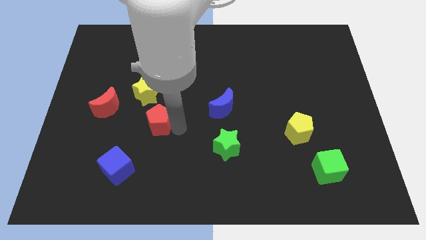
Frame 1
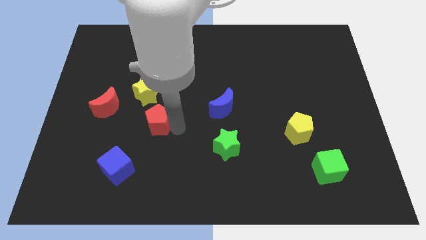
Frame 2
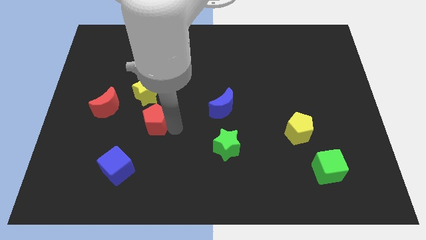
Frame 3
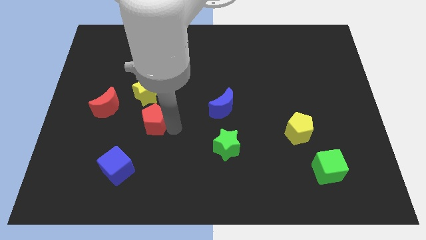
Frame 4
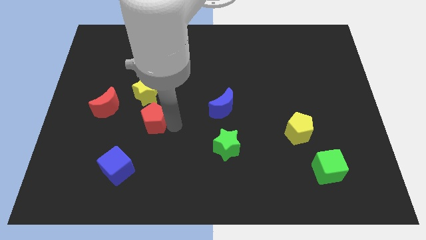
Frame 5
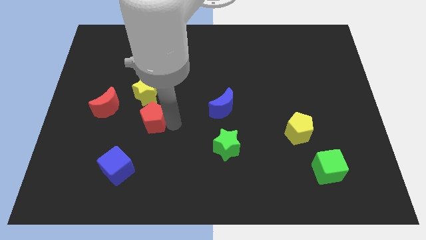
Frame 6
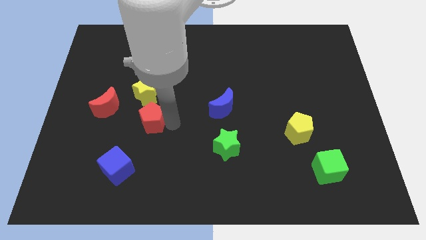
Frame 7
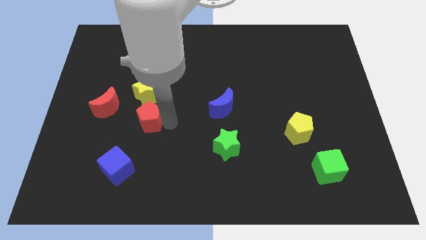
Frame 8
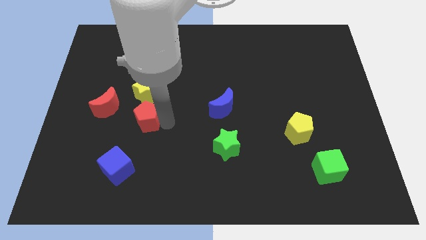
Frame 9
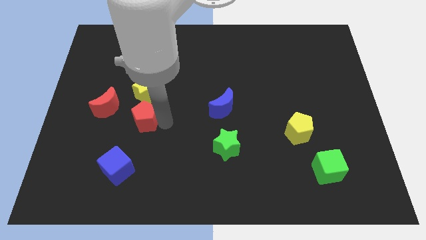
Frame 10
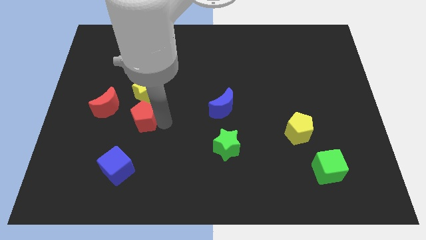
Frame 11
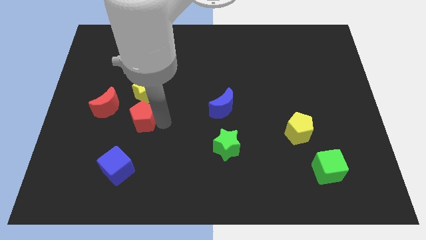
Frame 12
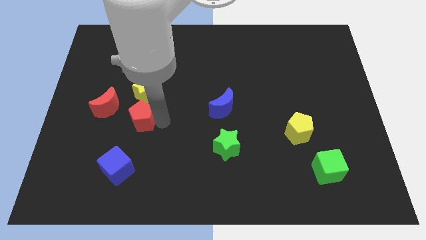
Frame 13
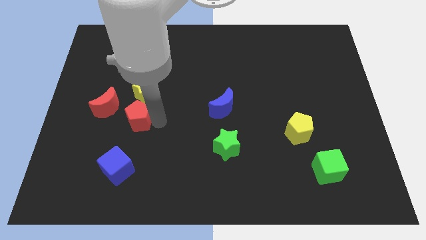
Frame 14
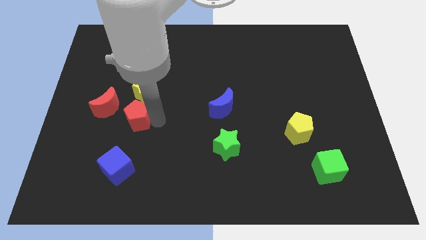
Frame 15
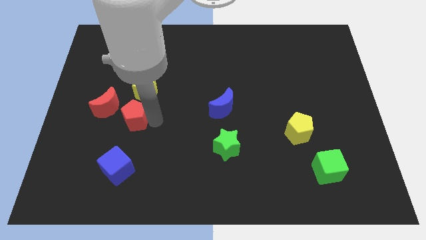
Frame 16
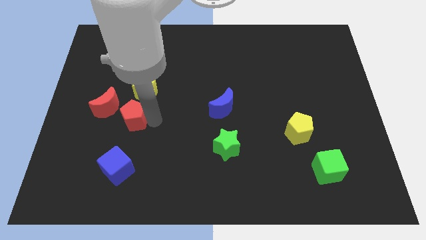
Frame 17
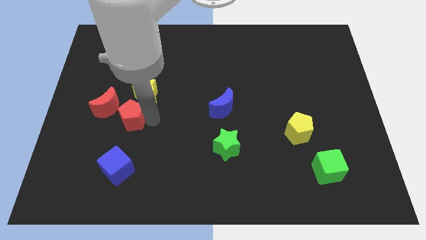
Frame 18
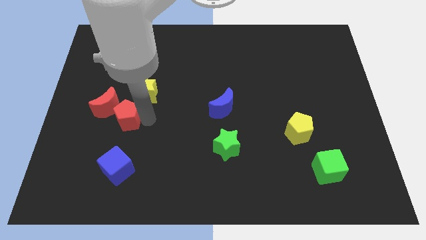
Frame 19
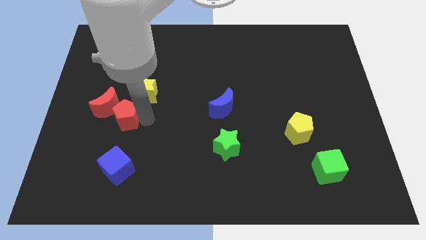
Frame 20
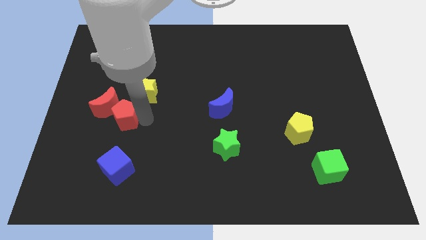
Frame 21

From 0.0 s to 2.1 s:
push the red pentagon in to the red moon

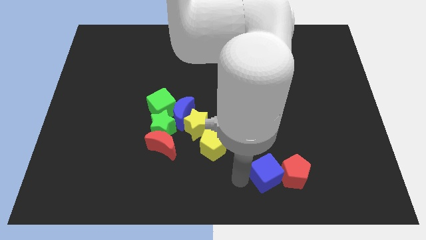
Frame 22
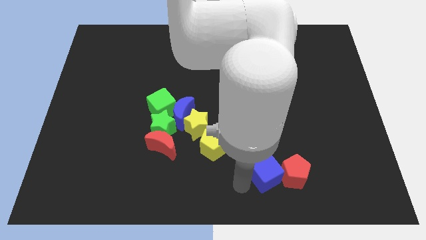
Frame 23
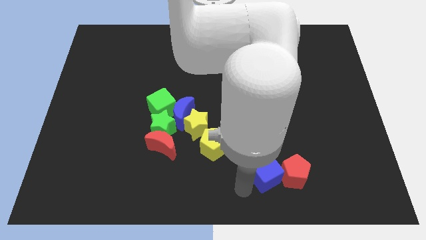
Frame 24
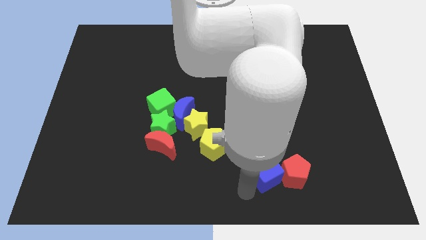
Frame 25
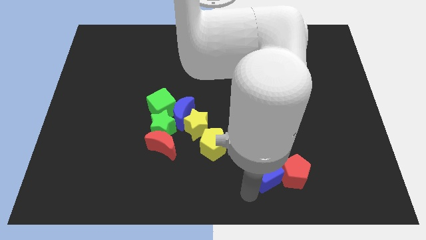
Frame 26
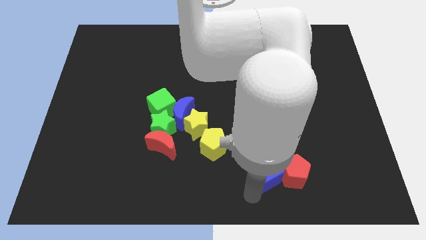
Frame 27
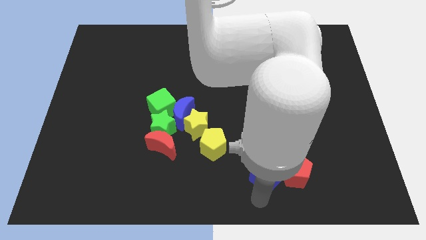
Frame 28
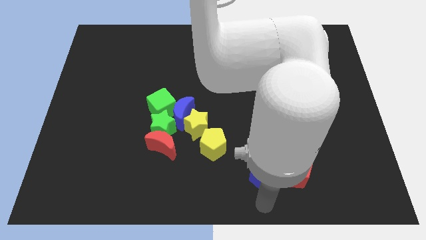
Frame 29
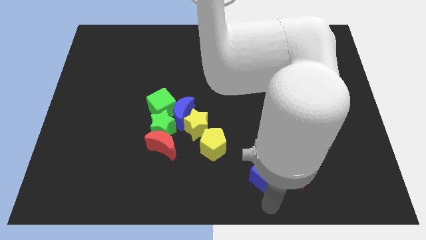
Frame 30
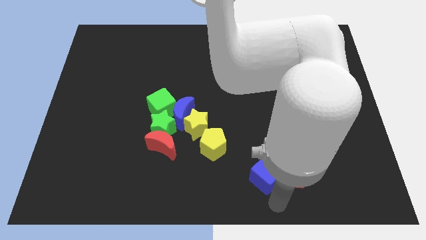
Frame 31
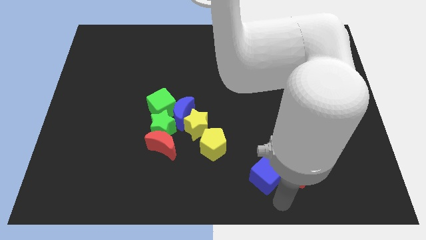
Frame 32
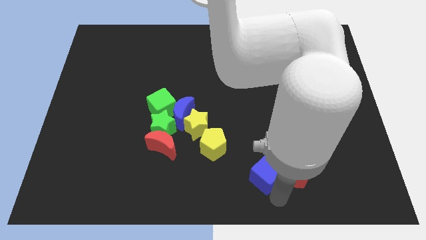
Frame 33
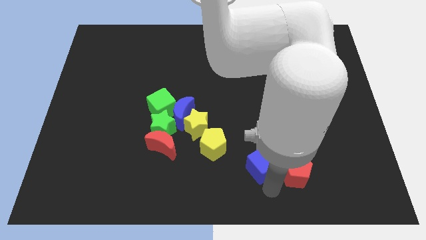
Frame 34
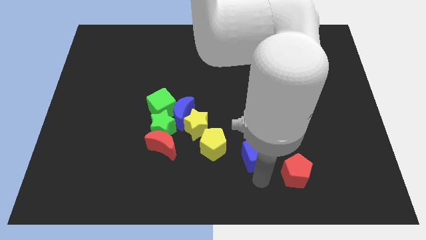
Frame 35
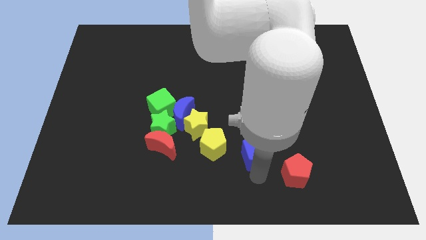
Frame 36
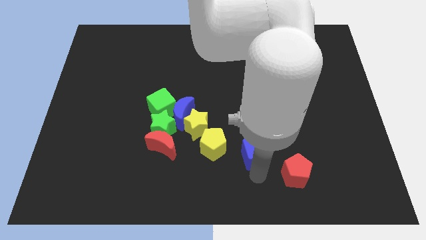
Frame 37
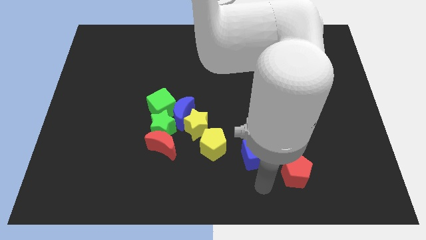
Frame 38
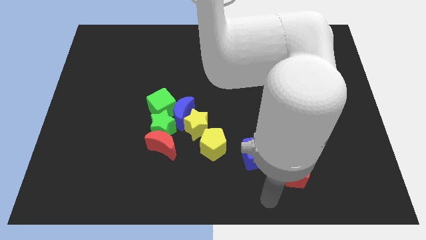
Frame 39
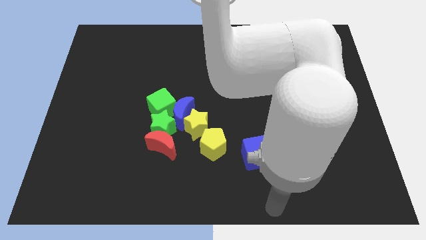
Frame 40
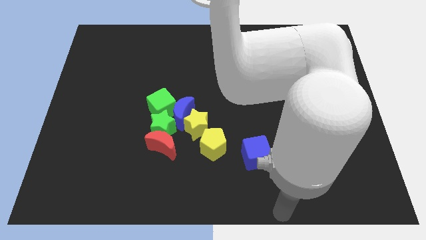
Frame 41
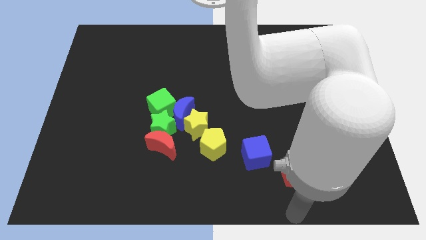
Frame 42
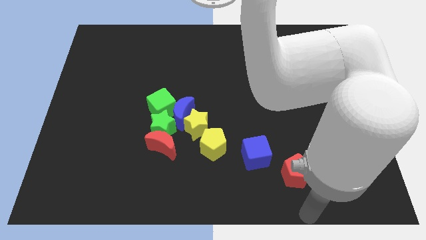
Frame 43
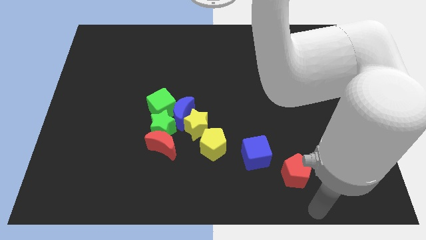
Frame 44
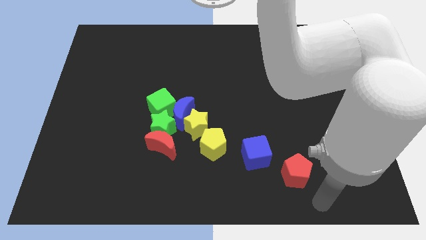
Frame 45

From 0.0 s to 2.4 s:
push the blue cube up slightly

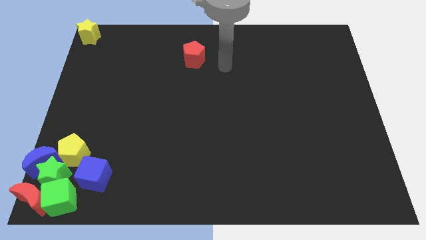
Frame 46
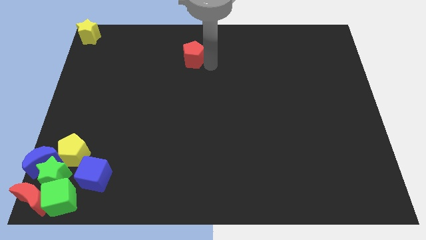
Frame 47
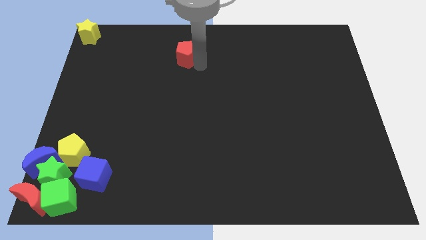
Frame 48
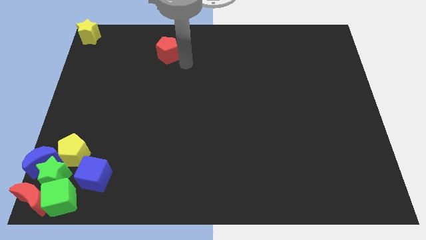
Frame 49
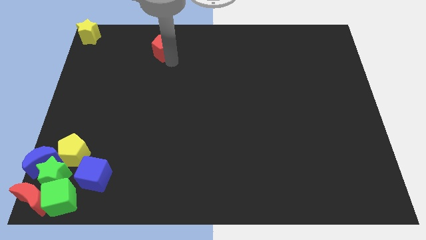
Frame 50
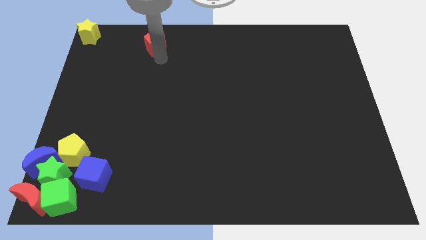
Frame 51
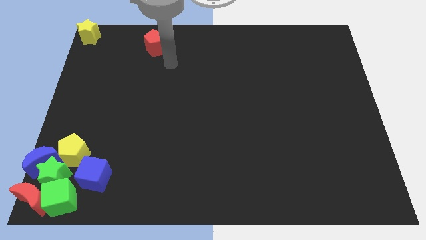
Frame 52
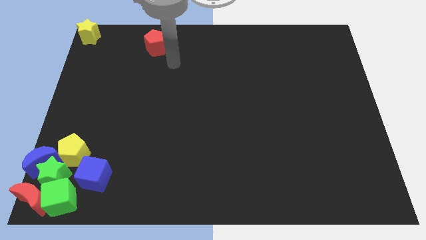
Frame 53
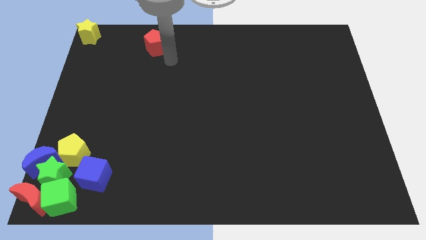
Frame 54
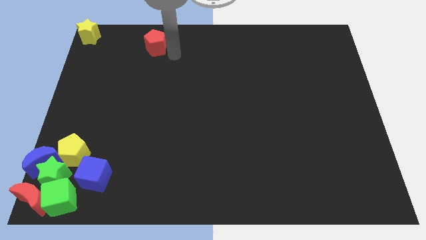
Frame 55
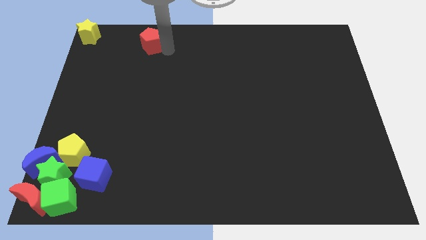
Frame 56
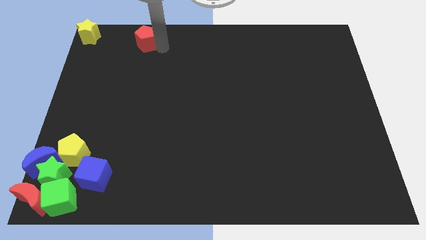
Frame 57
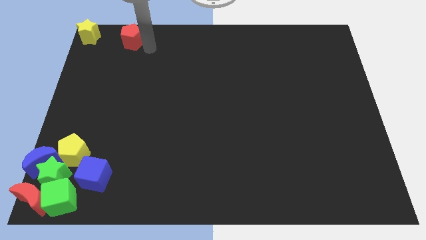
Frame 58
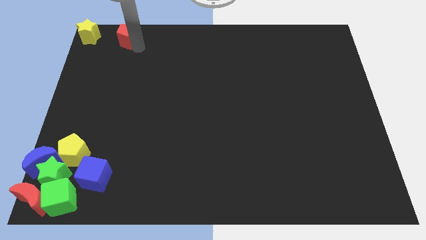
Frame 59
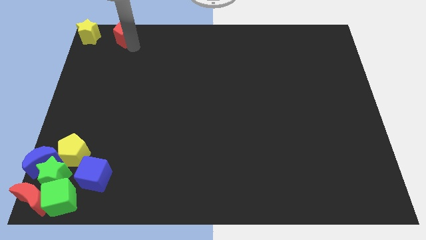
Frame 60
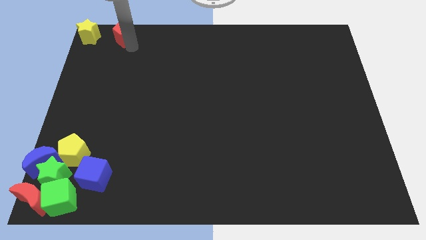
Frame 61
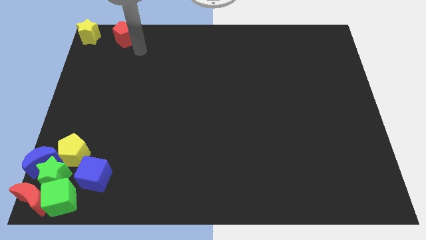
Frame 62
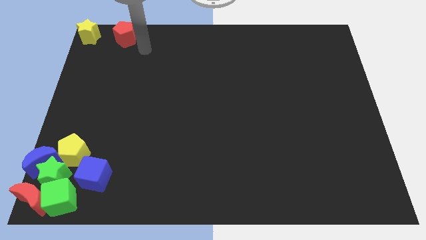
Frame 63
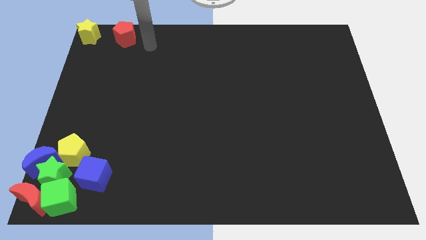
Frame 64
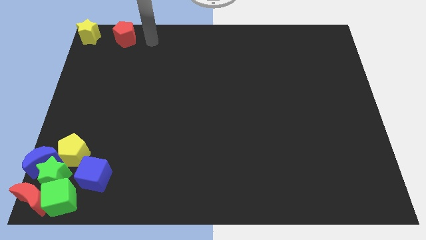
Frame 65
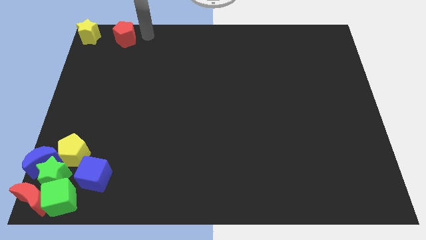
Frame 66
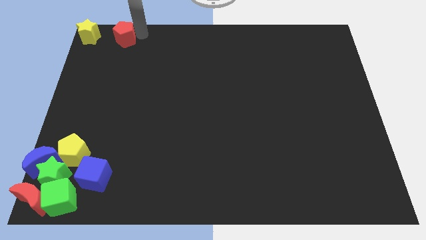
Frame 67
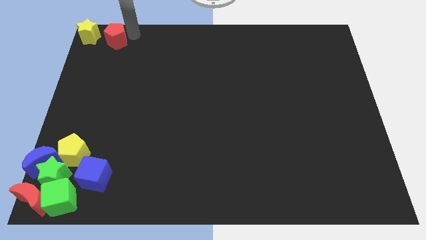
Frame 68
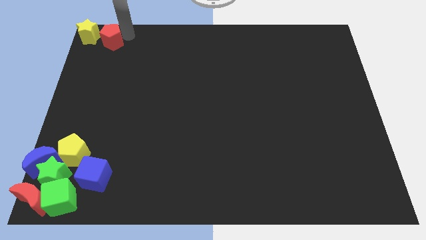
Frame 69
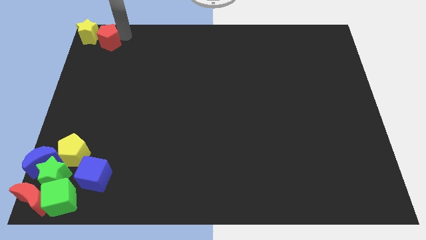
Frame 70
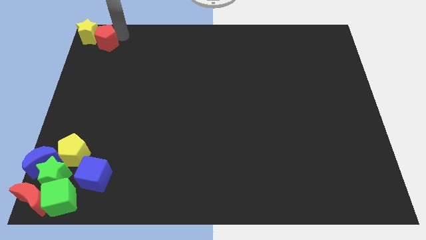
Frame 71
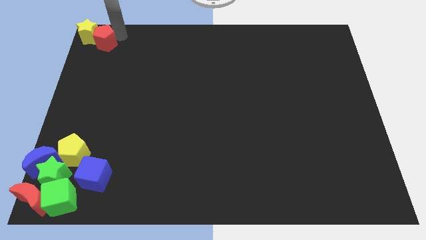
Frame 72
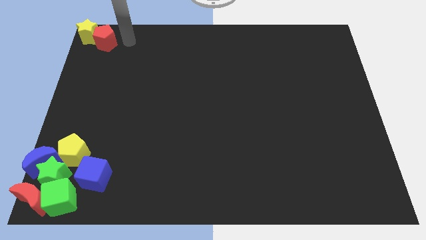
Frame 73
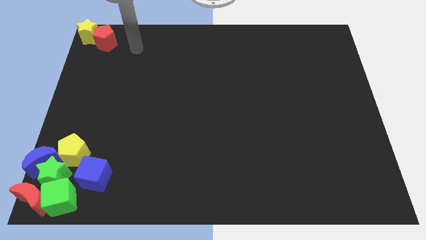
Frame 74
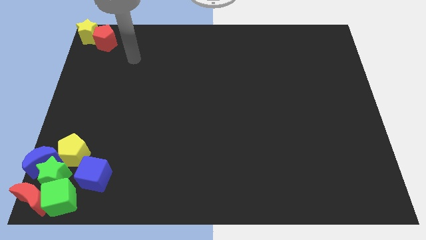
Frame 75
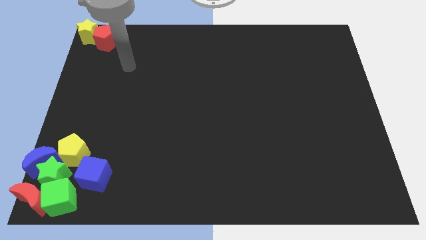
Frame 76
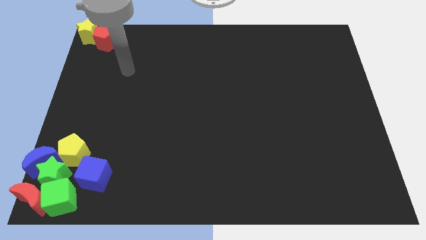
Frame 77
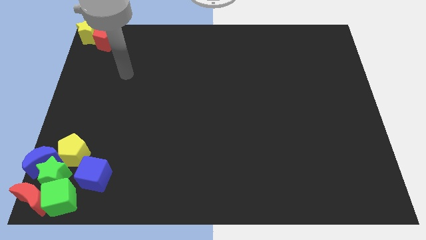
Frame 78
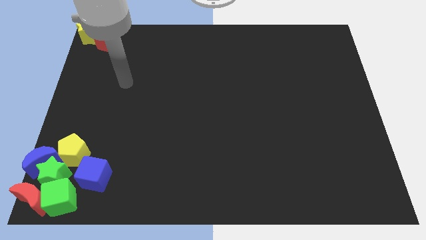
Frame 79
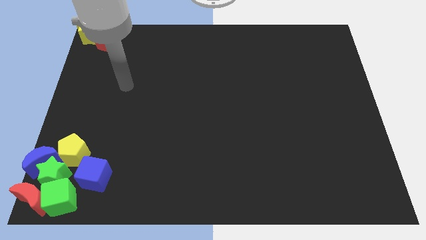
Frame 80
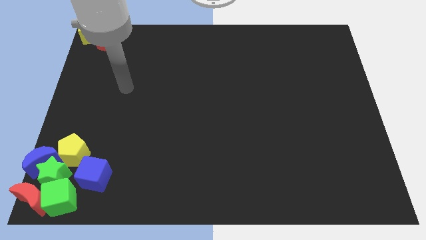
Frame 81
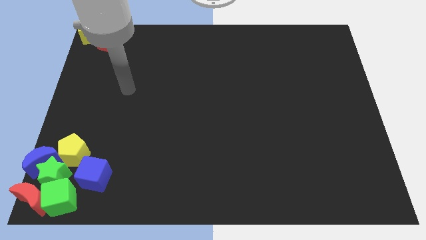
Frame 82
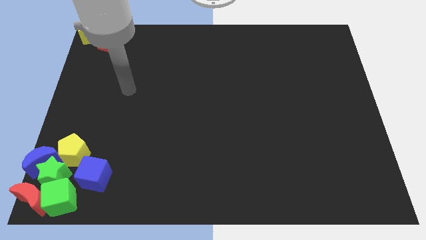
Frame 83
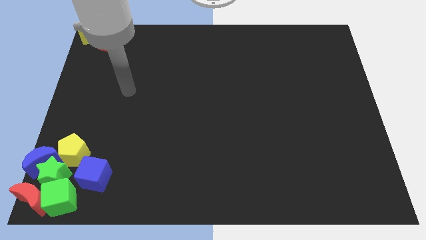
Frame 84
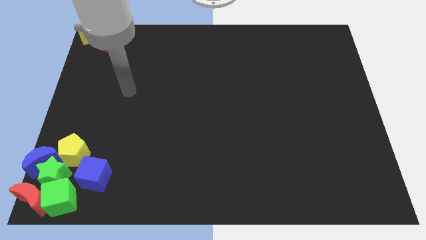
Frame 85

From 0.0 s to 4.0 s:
move the red pentagon into the yellow star

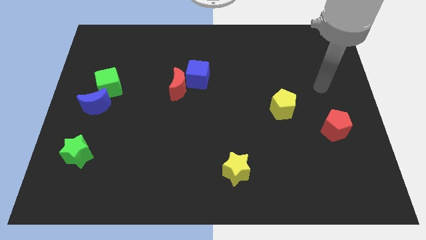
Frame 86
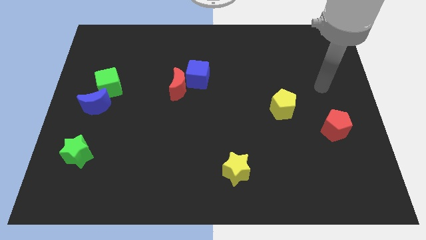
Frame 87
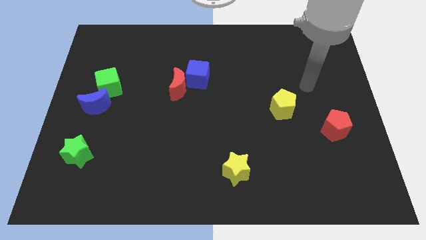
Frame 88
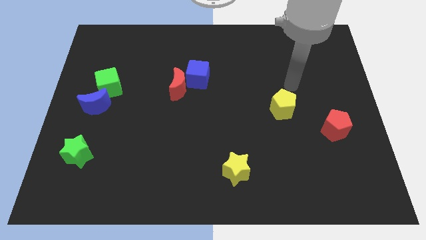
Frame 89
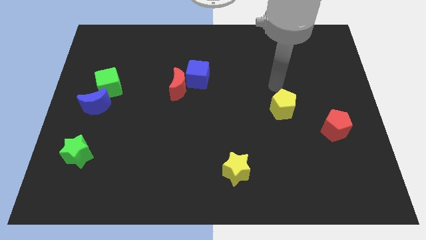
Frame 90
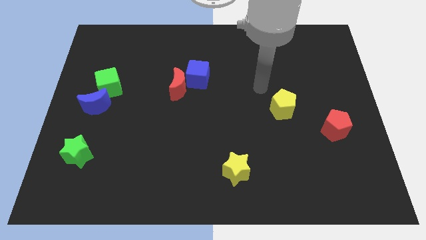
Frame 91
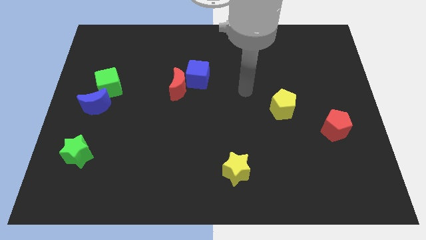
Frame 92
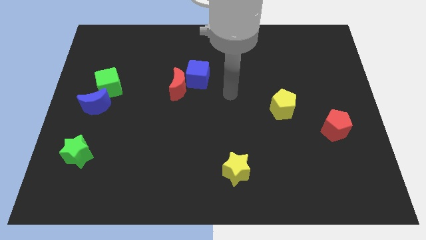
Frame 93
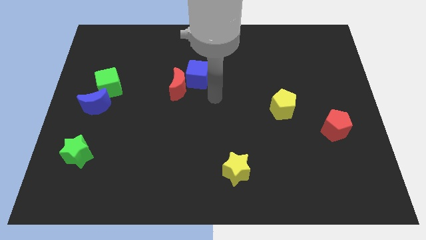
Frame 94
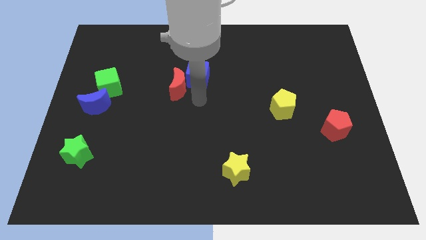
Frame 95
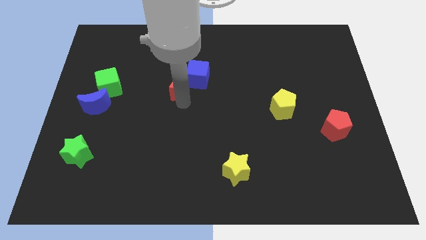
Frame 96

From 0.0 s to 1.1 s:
point your arm at the bottom side of the red crescent
